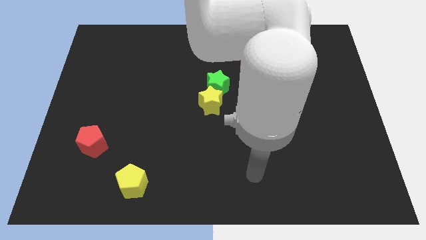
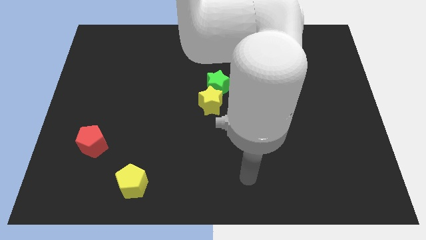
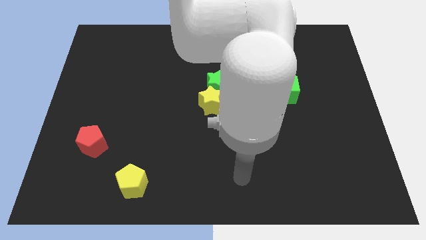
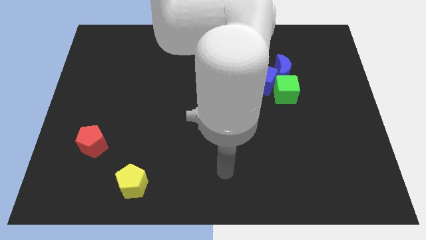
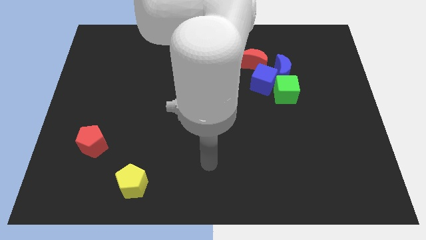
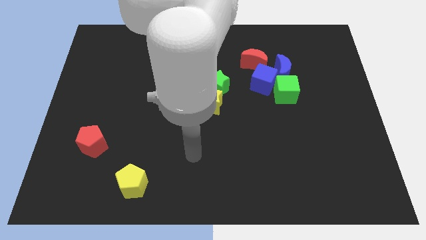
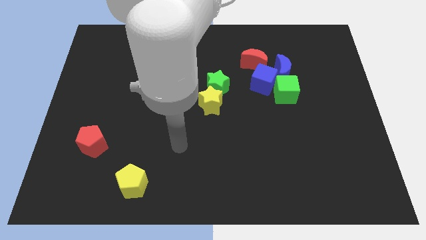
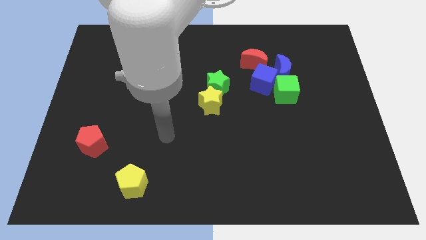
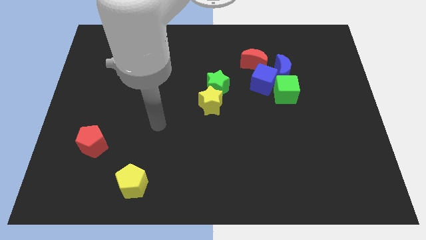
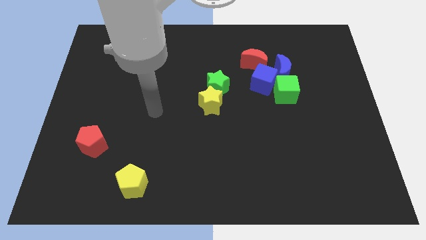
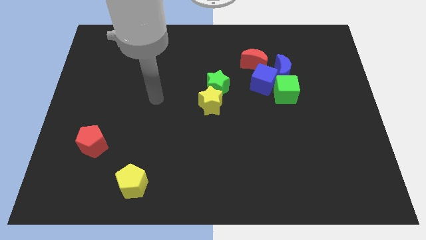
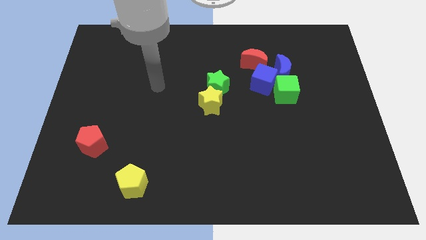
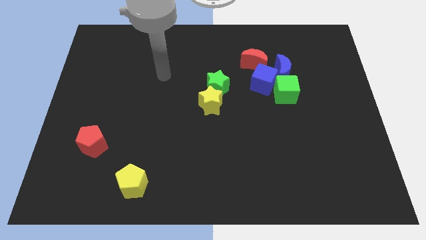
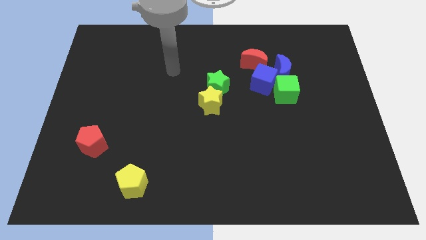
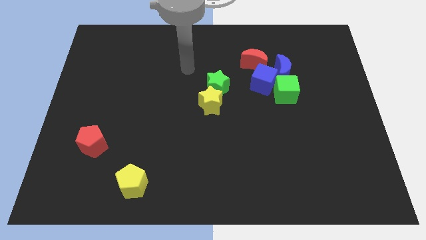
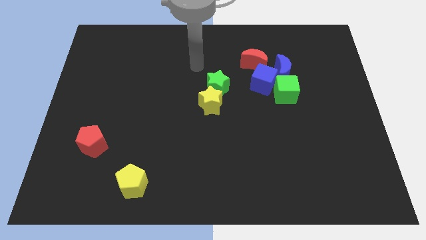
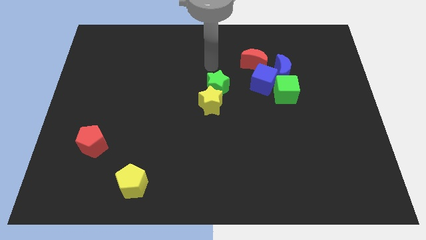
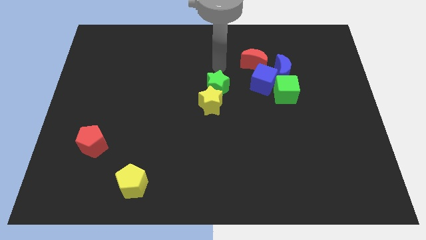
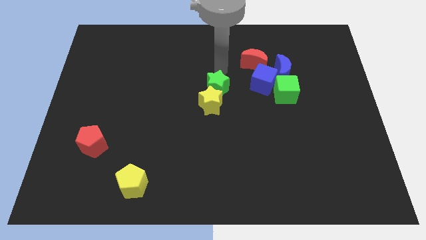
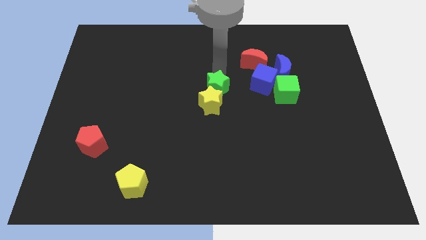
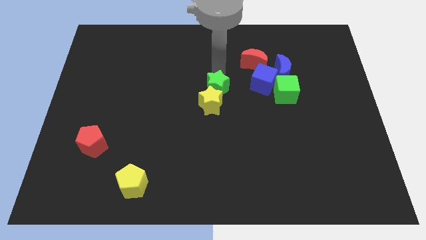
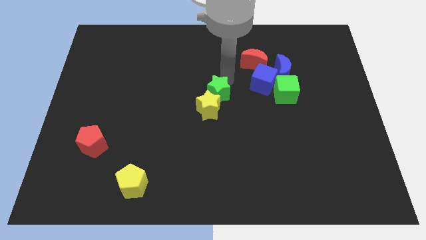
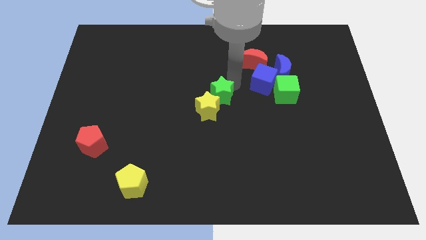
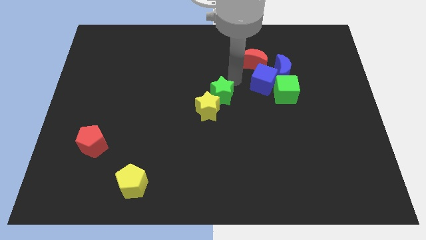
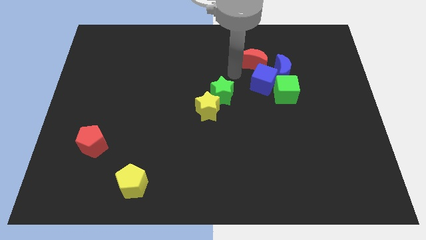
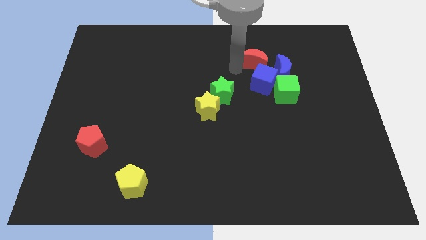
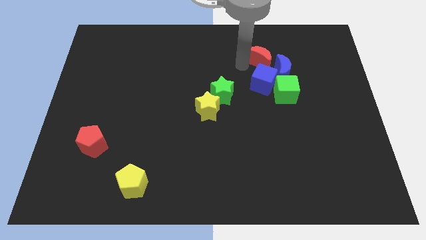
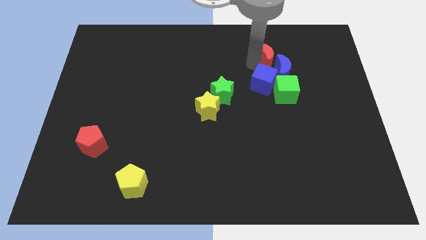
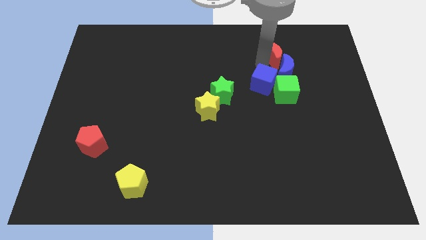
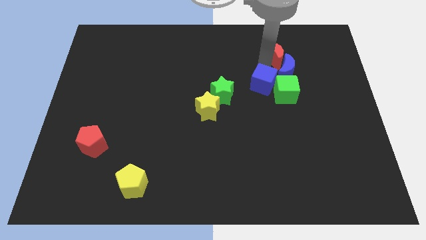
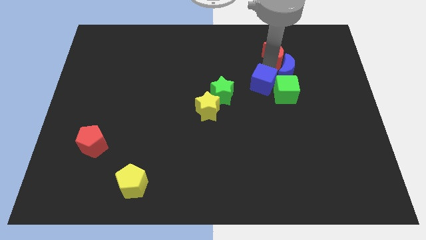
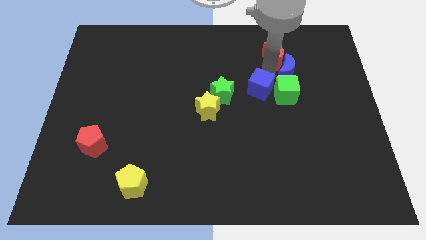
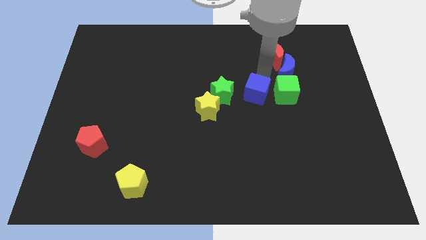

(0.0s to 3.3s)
push the yellow and green star blocks

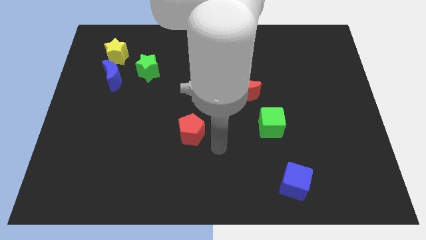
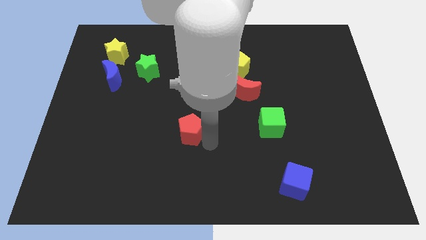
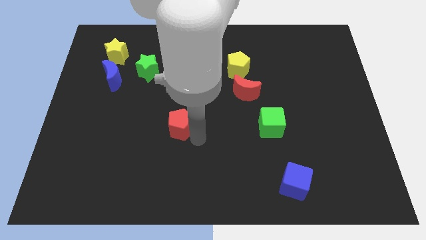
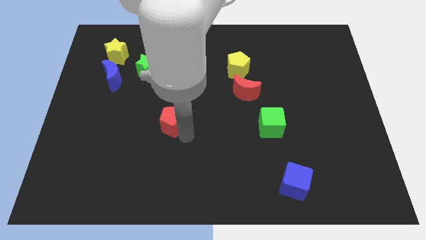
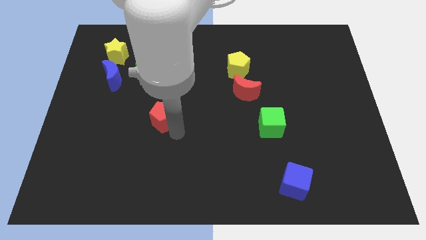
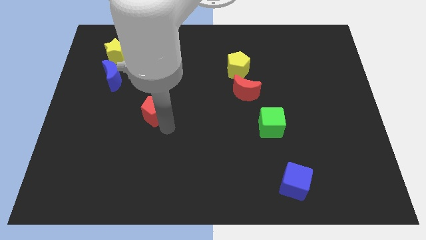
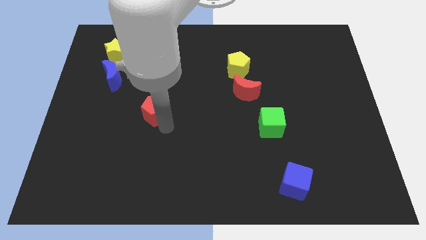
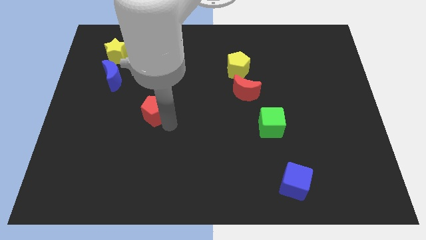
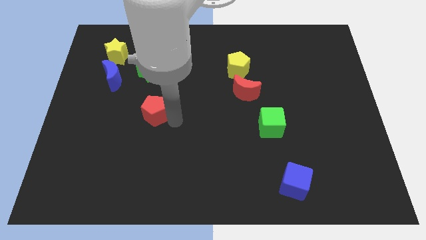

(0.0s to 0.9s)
move the red pentagon to the top

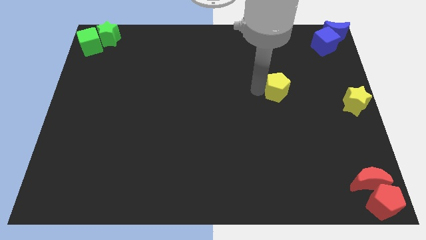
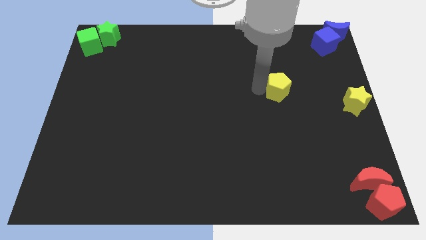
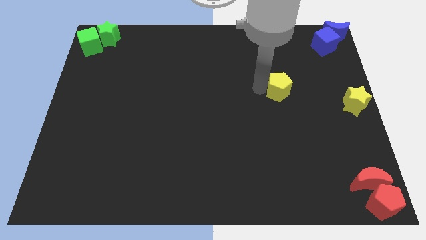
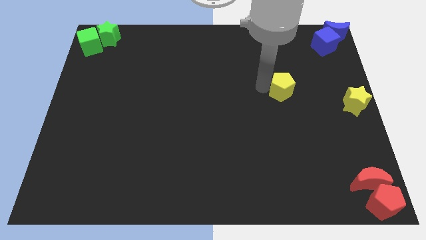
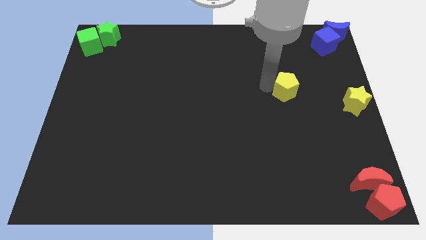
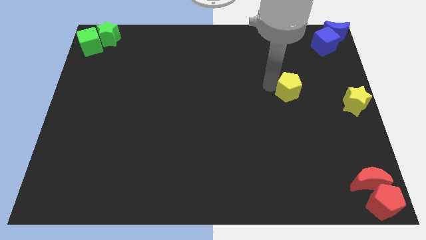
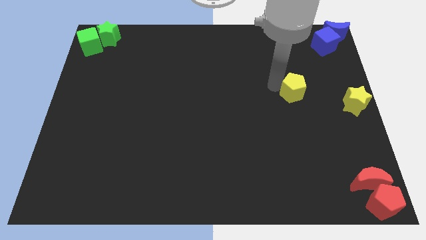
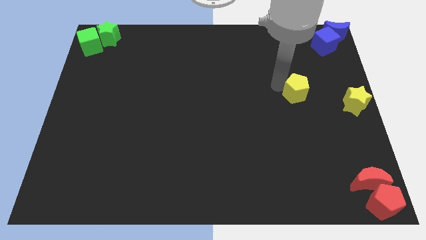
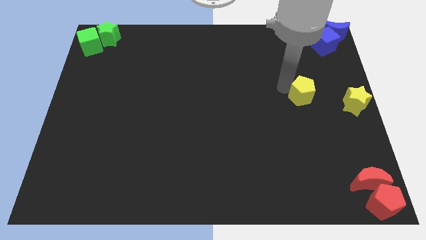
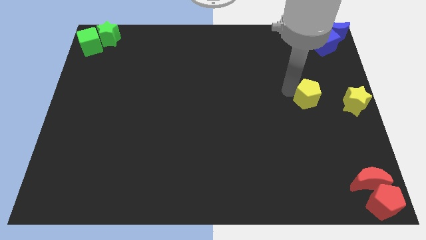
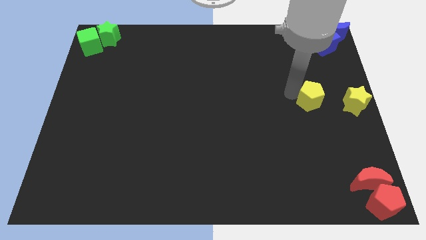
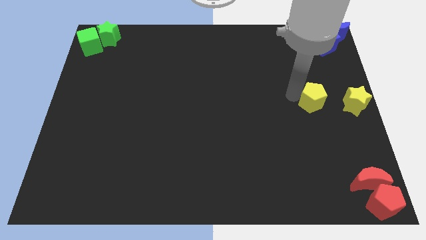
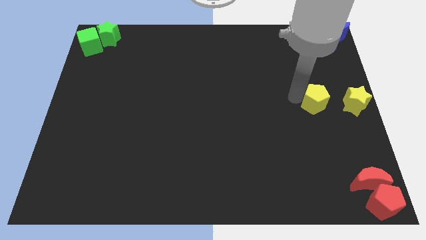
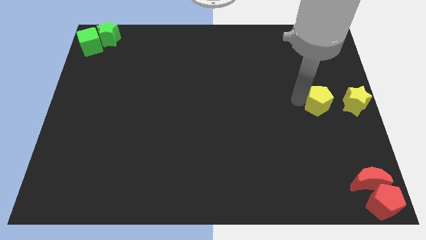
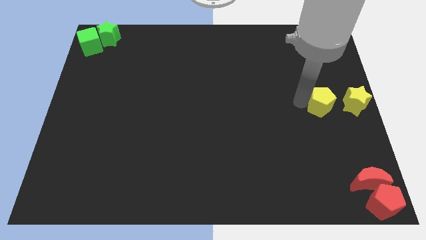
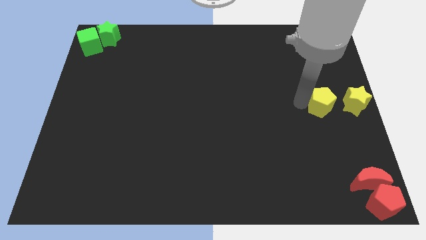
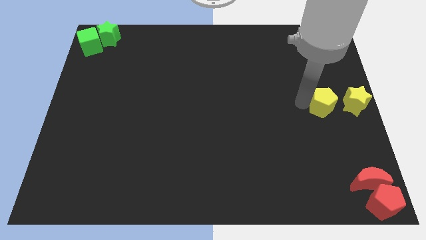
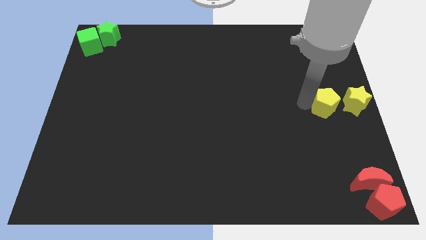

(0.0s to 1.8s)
move the yellow pentagon left to the yellow star

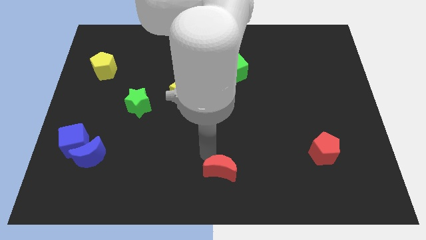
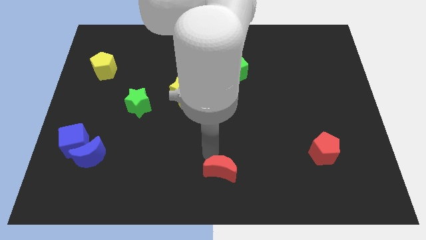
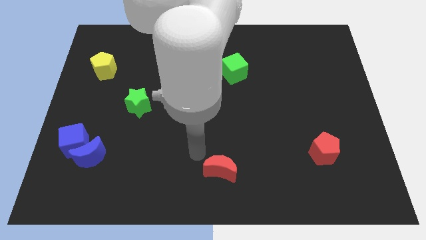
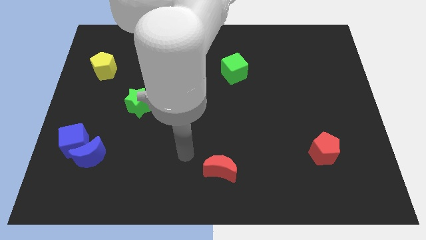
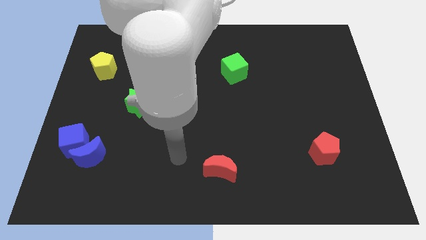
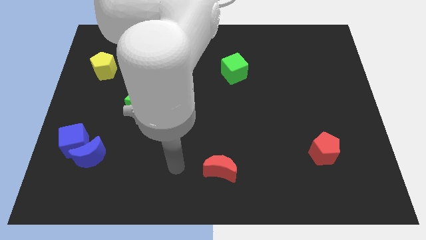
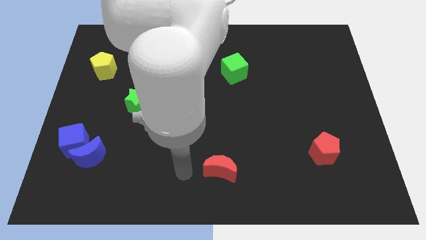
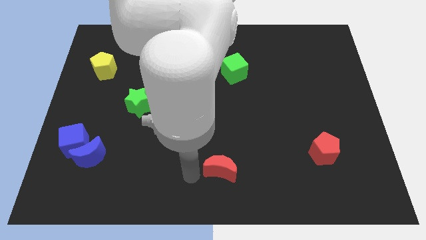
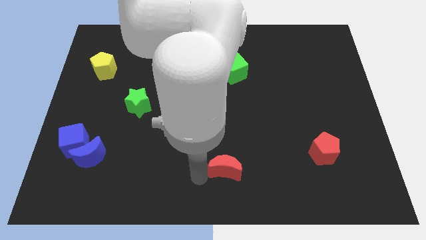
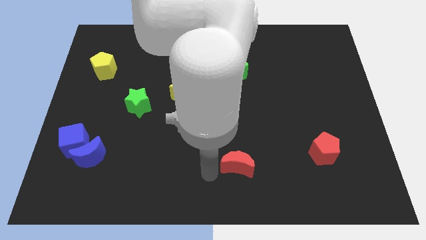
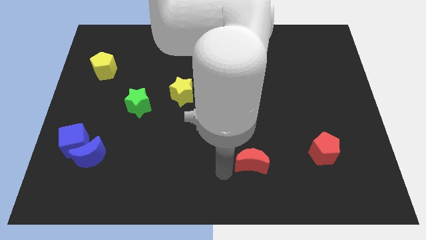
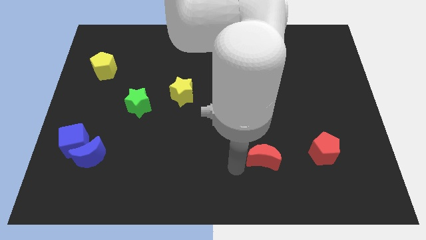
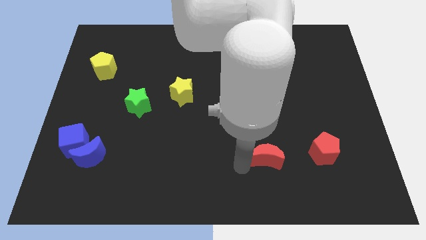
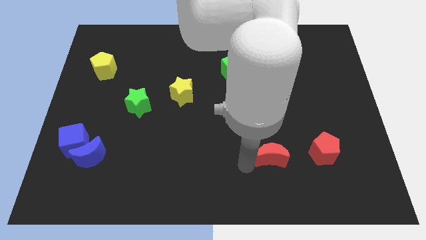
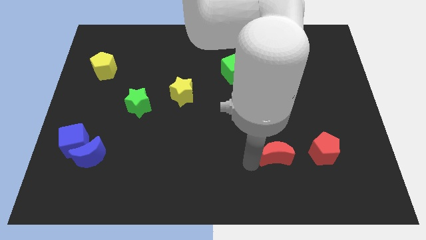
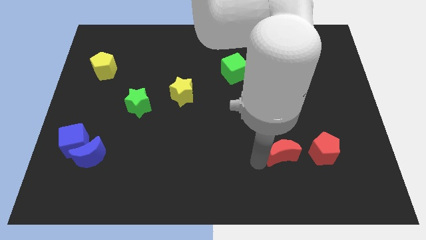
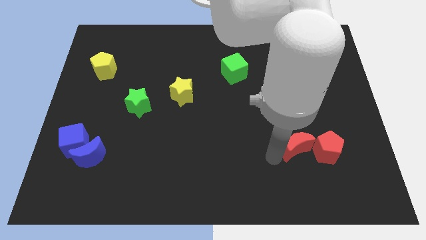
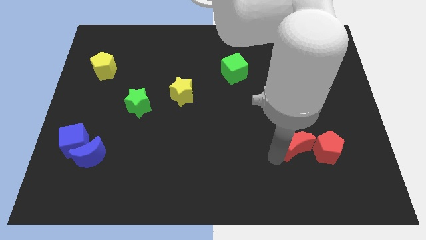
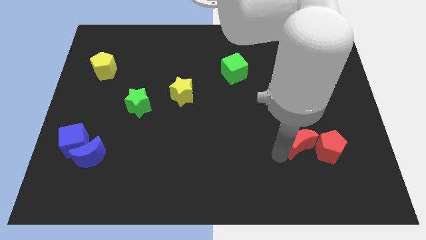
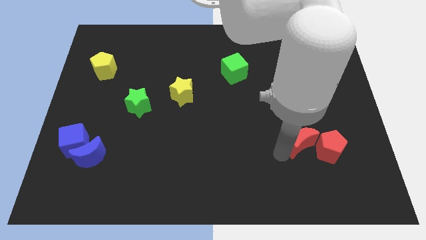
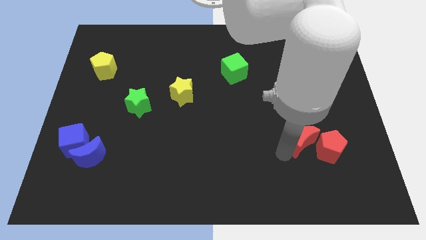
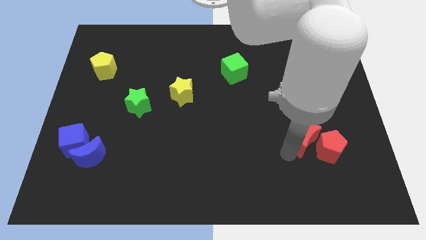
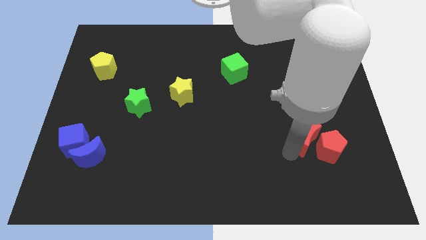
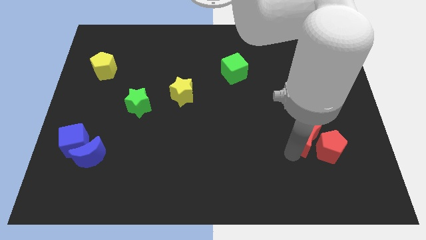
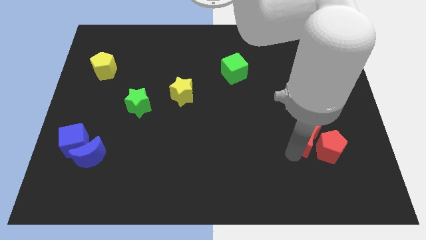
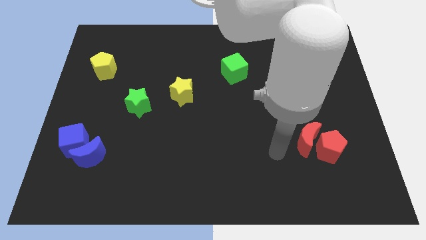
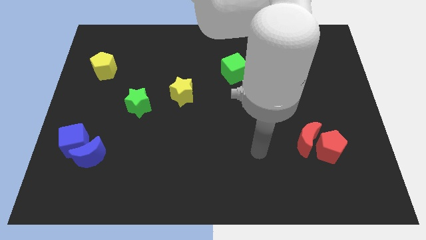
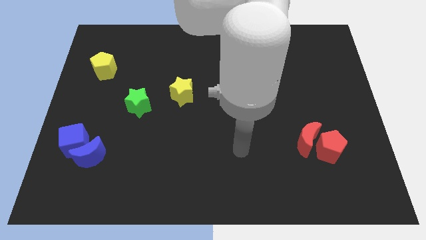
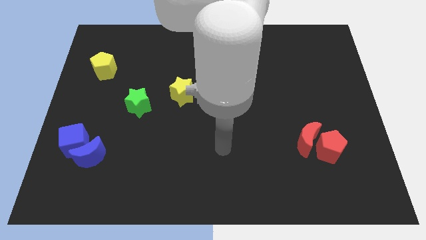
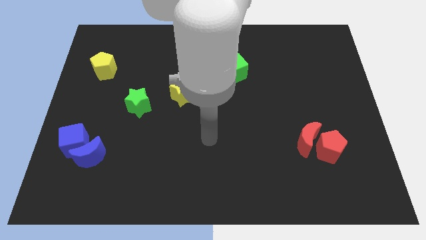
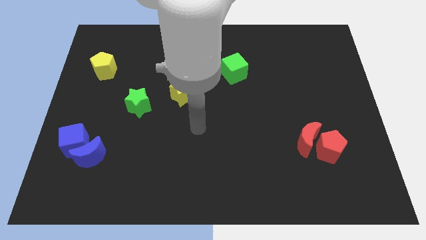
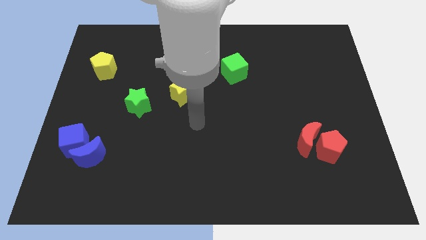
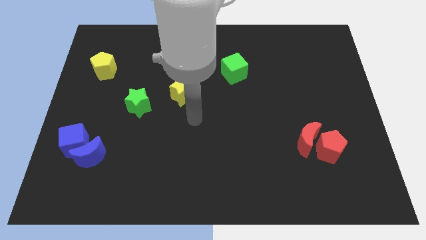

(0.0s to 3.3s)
push red moon into the red pentagon
